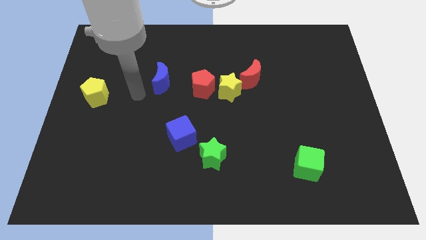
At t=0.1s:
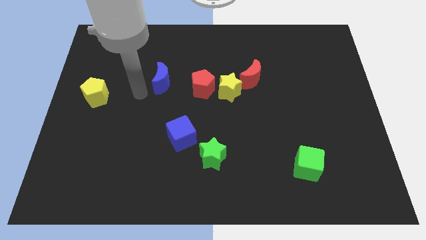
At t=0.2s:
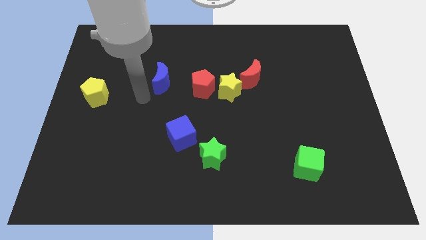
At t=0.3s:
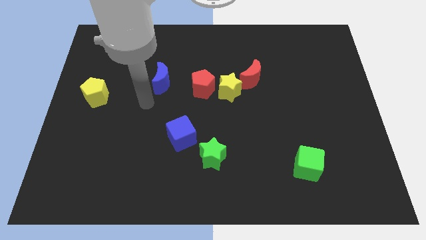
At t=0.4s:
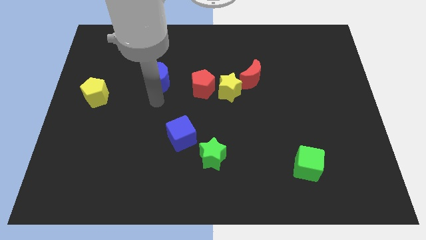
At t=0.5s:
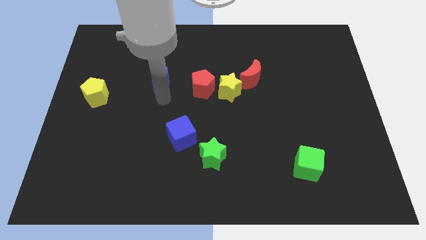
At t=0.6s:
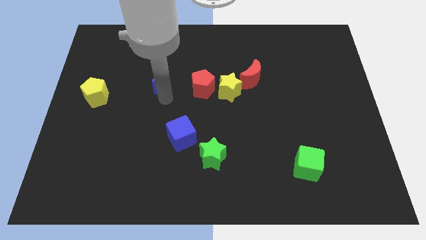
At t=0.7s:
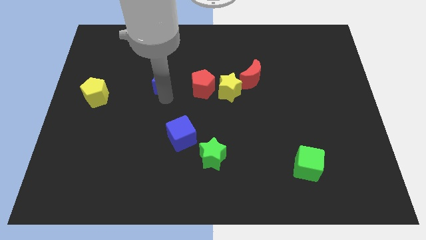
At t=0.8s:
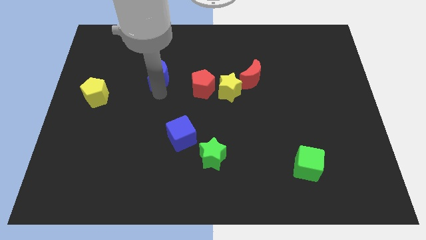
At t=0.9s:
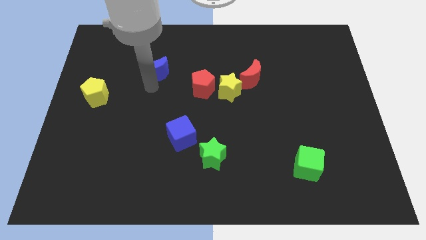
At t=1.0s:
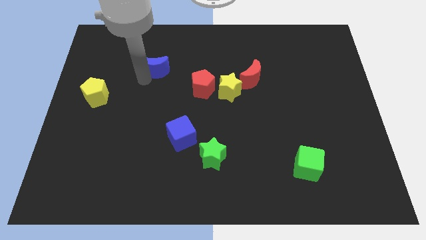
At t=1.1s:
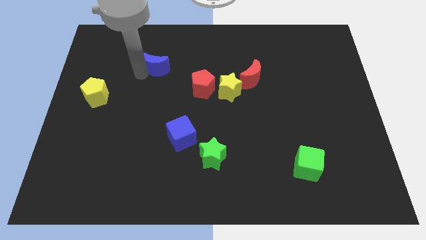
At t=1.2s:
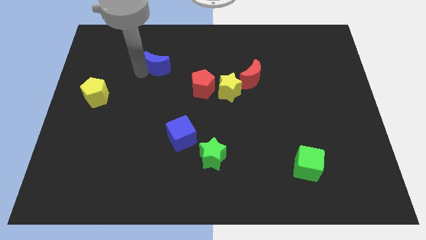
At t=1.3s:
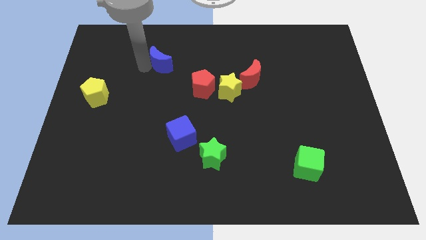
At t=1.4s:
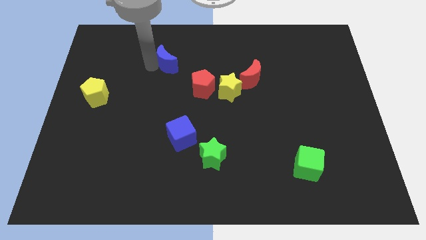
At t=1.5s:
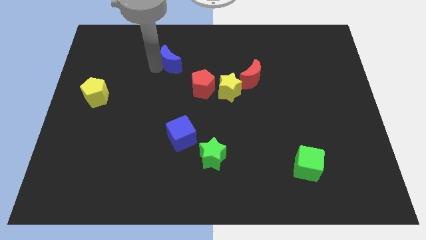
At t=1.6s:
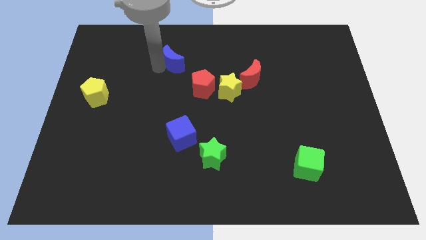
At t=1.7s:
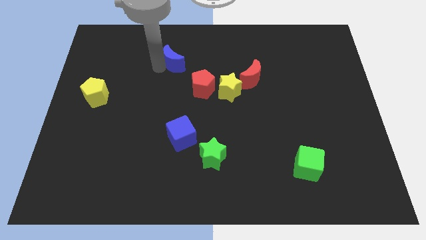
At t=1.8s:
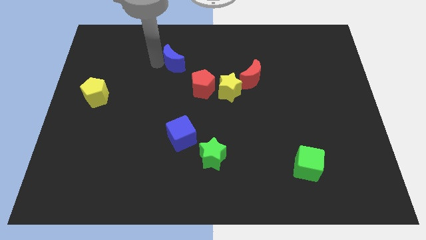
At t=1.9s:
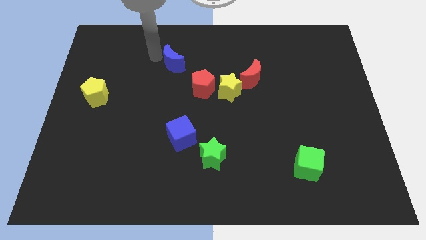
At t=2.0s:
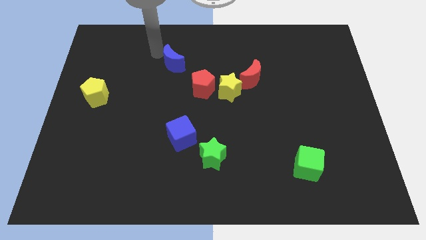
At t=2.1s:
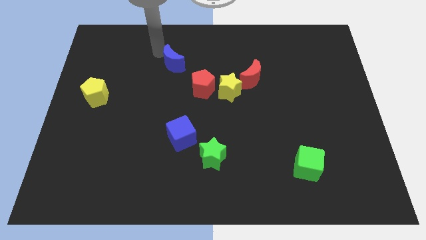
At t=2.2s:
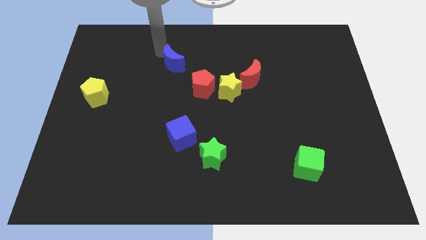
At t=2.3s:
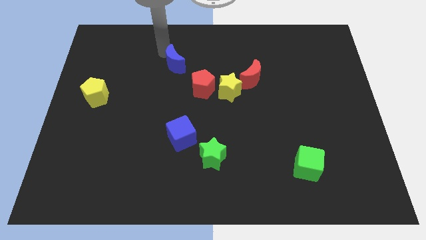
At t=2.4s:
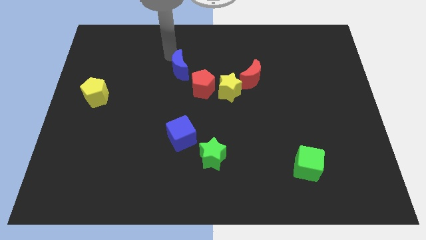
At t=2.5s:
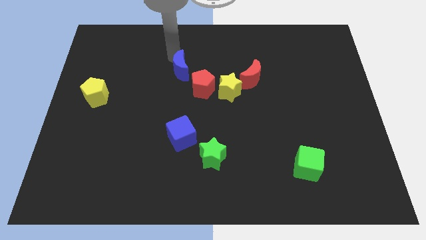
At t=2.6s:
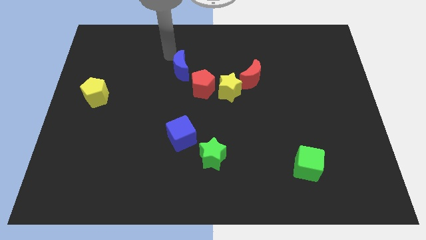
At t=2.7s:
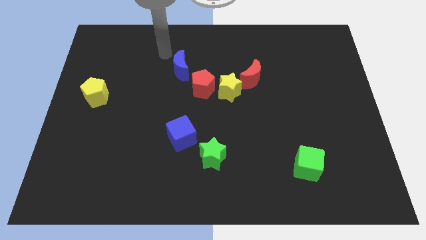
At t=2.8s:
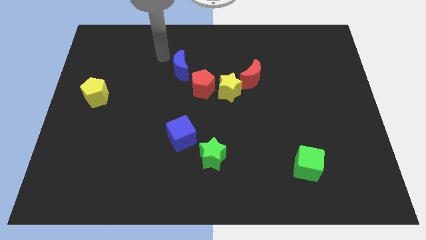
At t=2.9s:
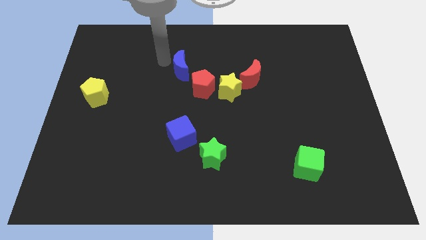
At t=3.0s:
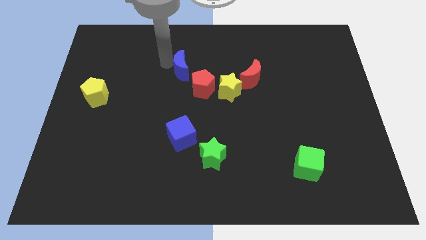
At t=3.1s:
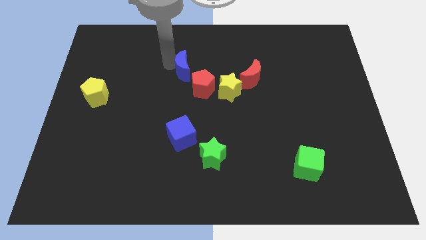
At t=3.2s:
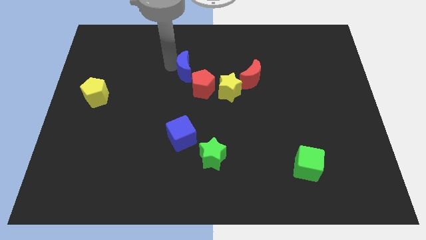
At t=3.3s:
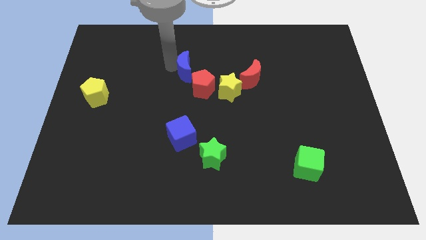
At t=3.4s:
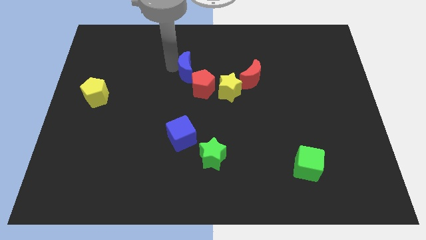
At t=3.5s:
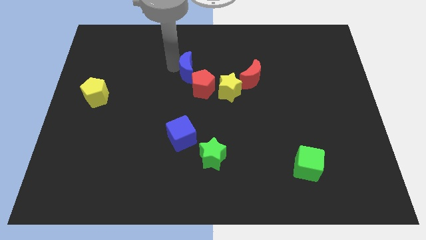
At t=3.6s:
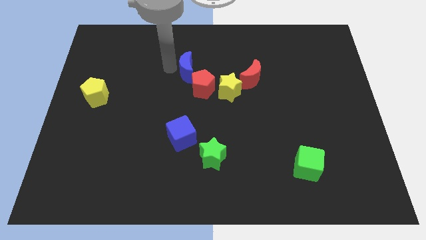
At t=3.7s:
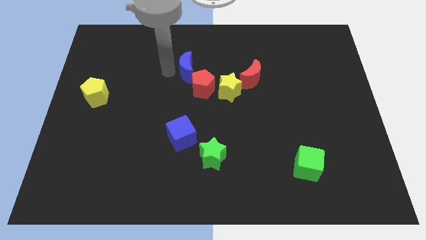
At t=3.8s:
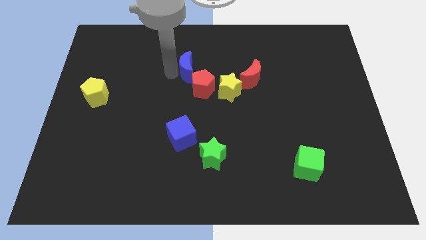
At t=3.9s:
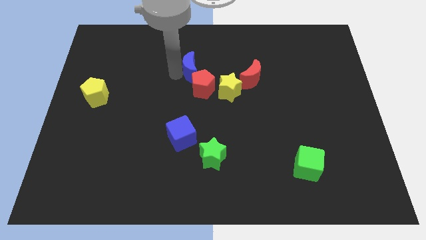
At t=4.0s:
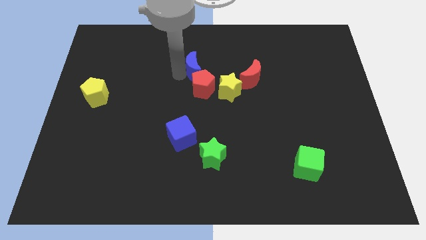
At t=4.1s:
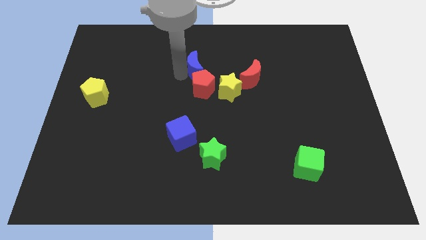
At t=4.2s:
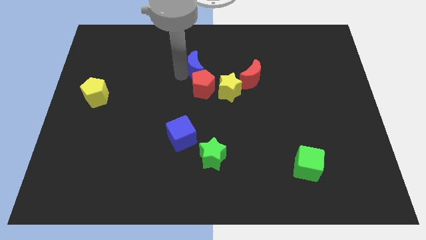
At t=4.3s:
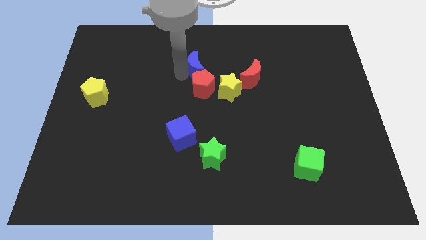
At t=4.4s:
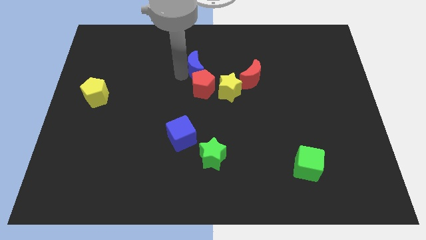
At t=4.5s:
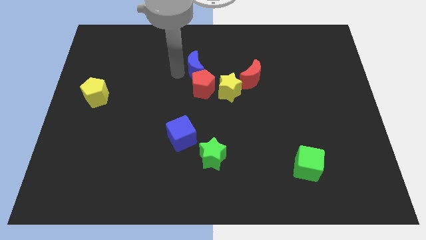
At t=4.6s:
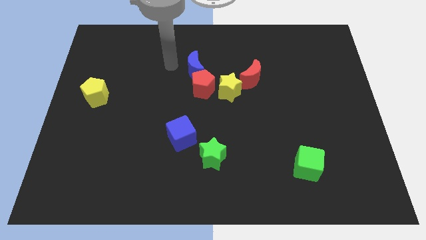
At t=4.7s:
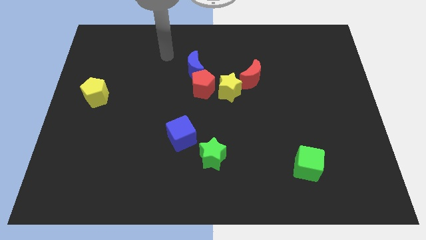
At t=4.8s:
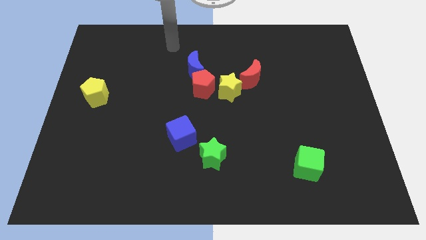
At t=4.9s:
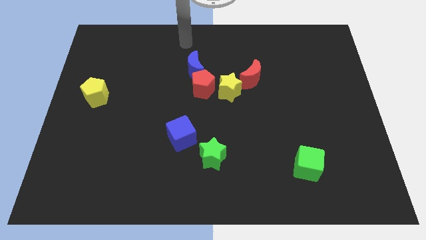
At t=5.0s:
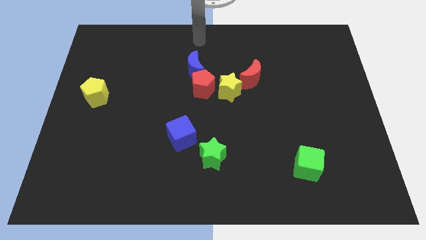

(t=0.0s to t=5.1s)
push blue crescent to the top of red pentagon

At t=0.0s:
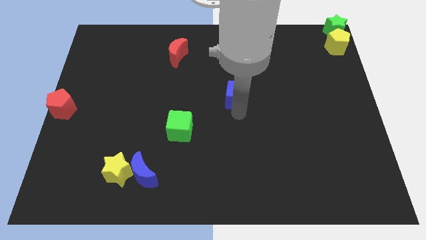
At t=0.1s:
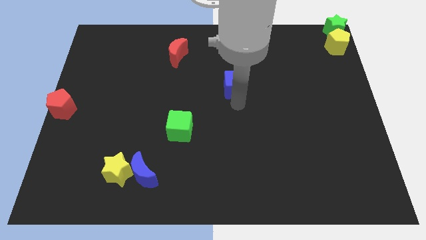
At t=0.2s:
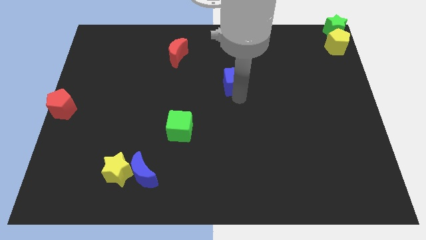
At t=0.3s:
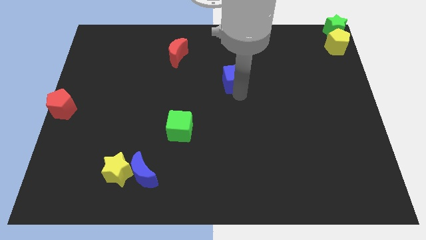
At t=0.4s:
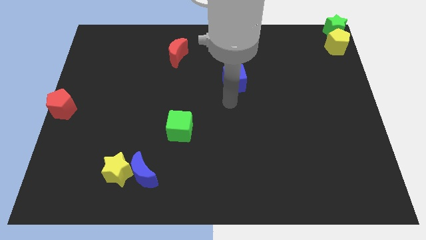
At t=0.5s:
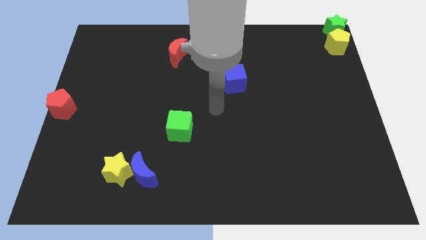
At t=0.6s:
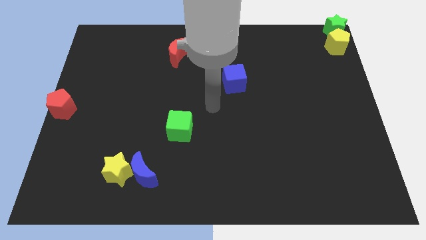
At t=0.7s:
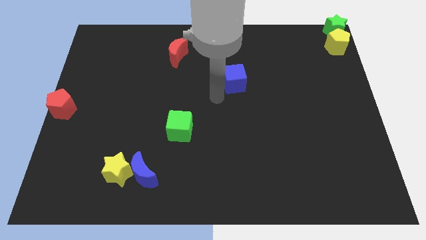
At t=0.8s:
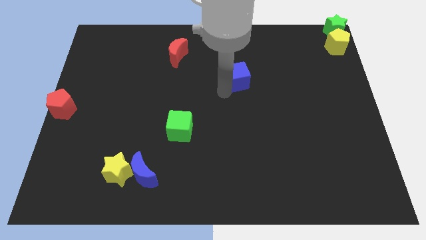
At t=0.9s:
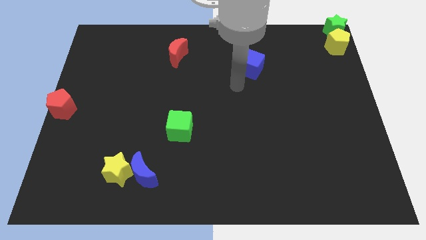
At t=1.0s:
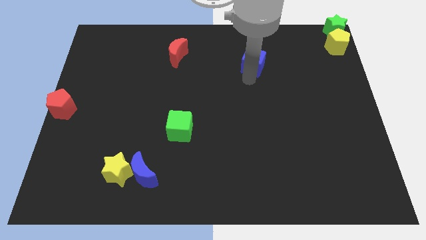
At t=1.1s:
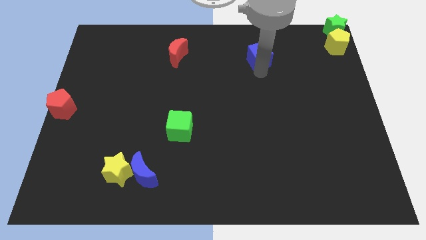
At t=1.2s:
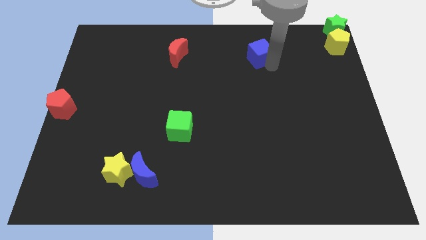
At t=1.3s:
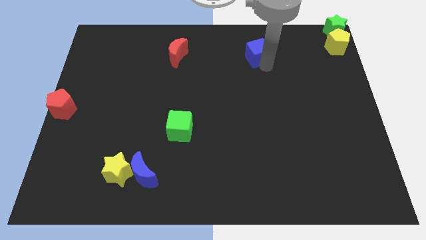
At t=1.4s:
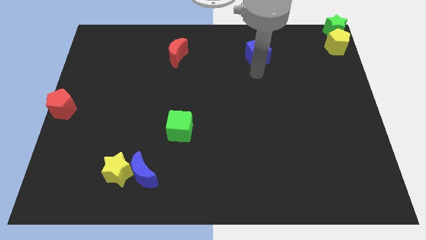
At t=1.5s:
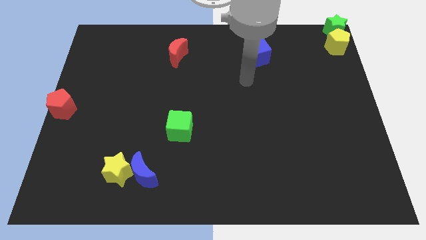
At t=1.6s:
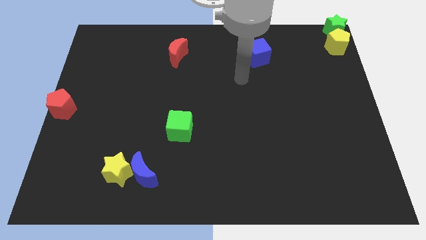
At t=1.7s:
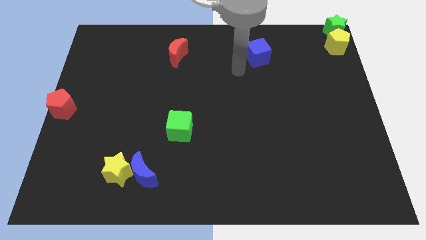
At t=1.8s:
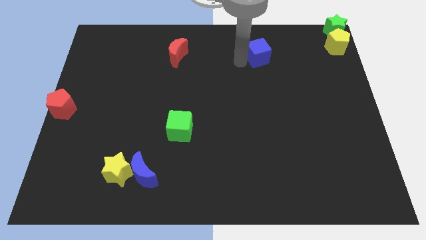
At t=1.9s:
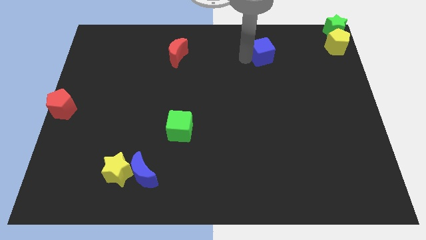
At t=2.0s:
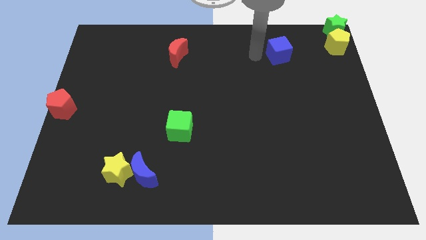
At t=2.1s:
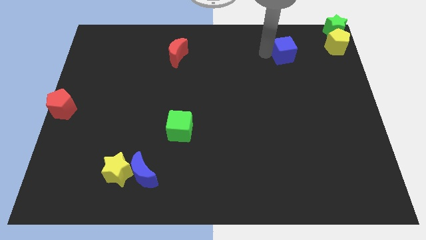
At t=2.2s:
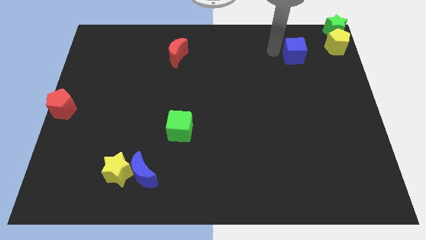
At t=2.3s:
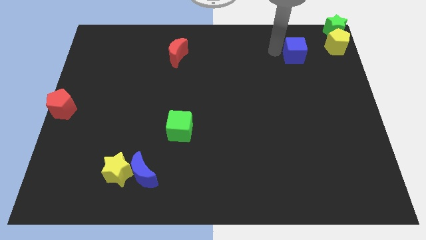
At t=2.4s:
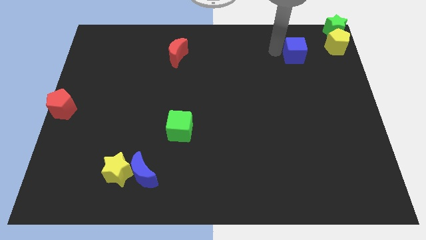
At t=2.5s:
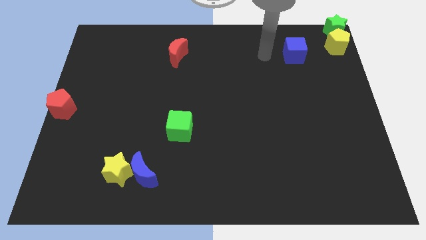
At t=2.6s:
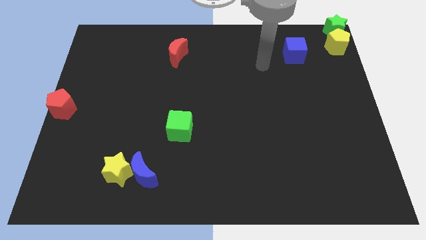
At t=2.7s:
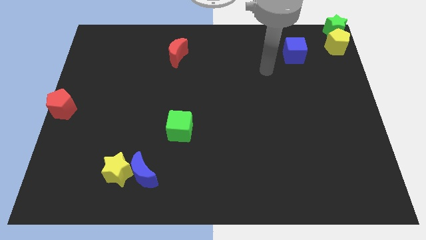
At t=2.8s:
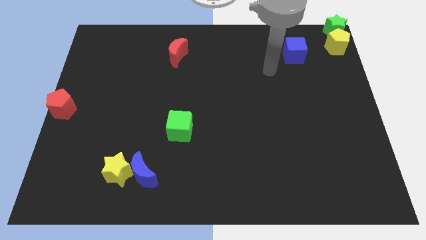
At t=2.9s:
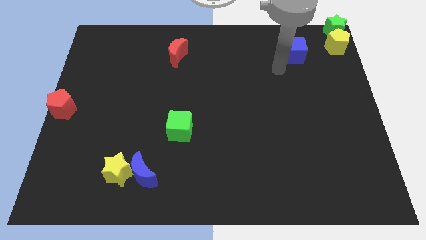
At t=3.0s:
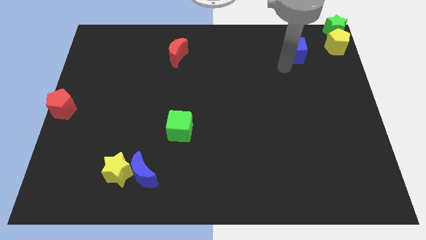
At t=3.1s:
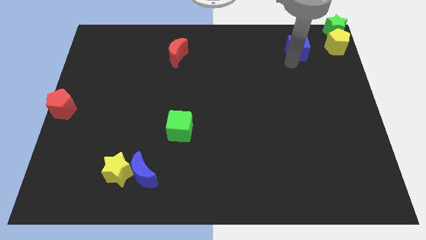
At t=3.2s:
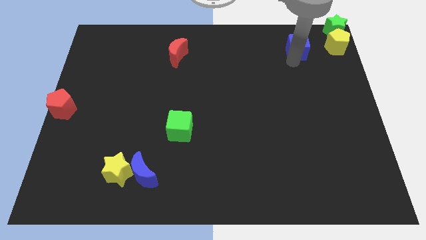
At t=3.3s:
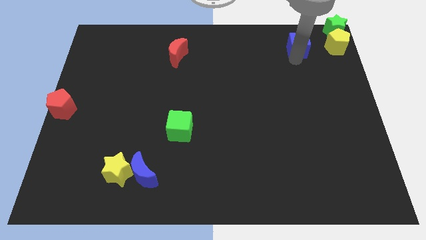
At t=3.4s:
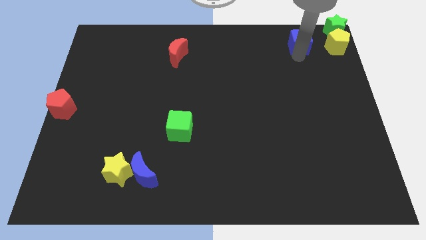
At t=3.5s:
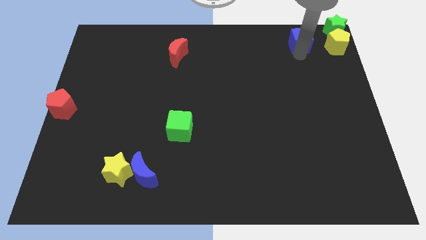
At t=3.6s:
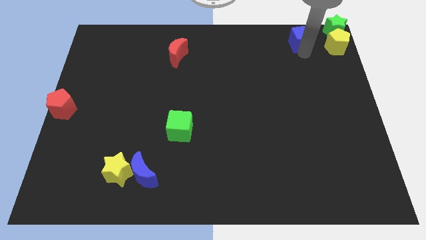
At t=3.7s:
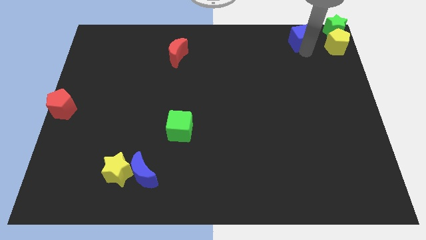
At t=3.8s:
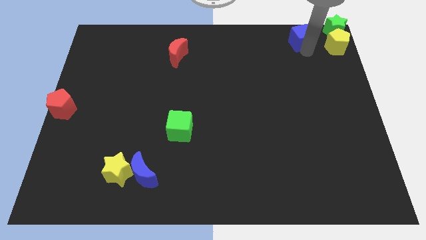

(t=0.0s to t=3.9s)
drag the blue cube to the left side of the yellow pentagon
